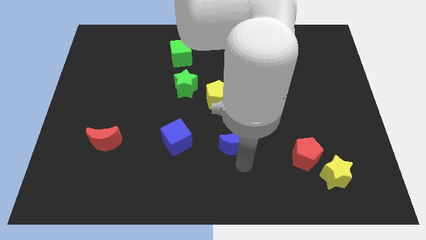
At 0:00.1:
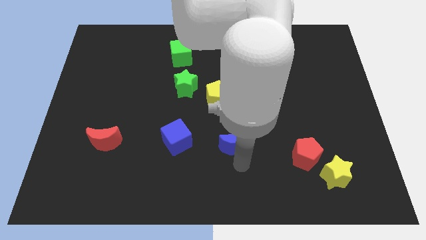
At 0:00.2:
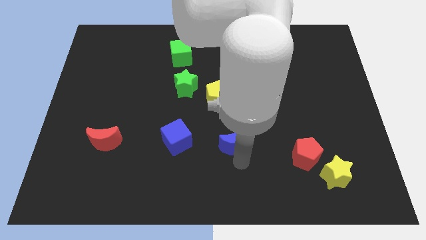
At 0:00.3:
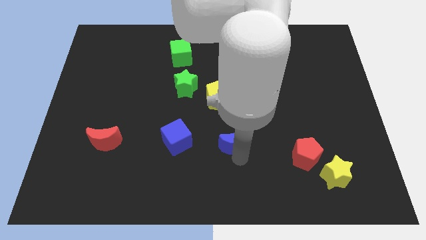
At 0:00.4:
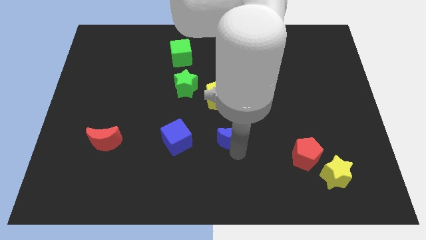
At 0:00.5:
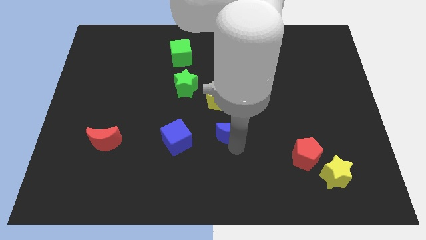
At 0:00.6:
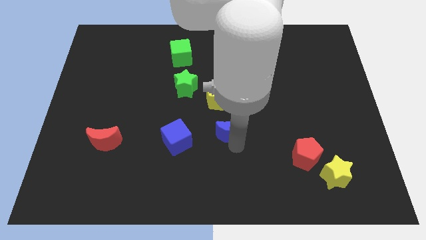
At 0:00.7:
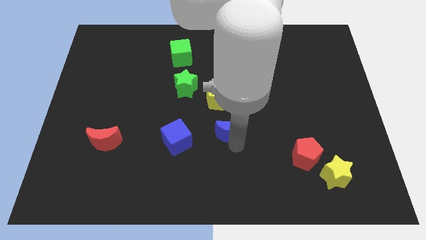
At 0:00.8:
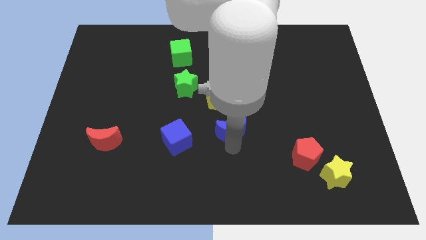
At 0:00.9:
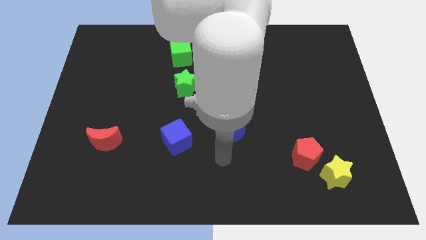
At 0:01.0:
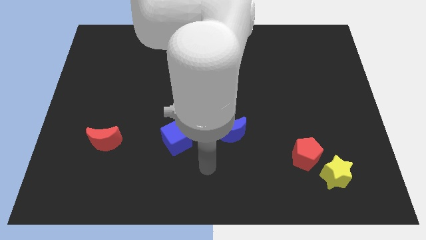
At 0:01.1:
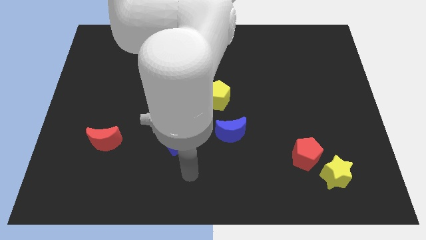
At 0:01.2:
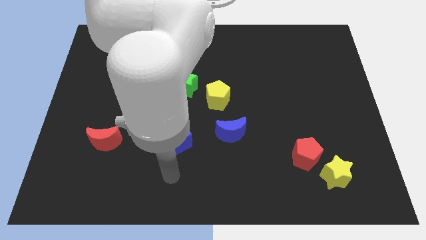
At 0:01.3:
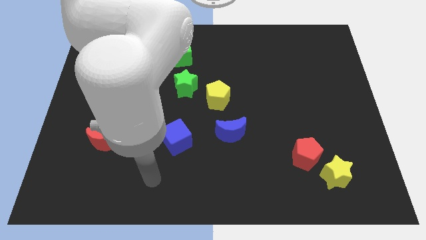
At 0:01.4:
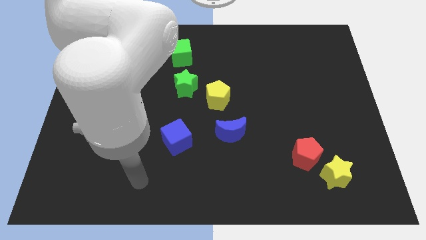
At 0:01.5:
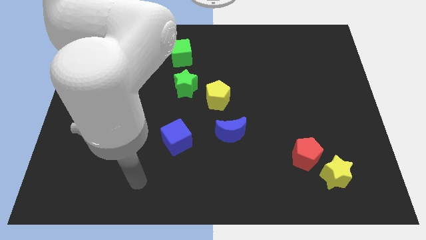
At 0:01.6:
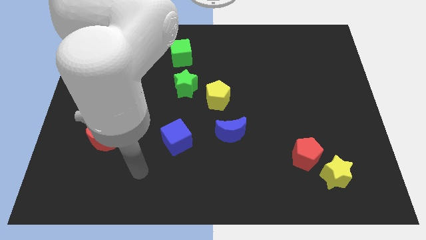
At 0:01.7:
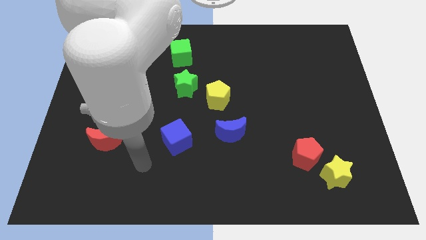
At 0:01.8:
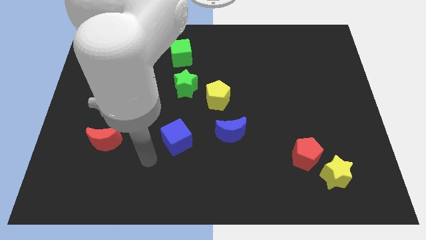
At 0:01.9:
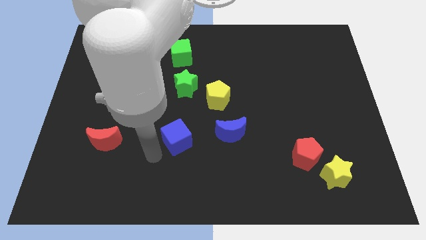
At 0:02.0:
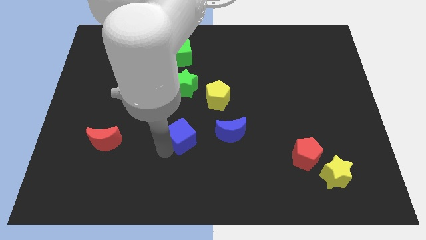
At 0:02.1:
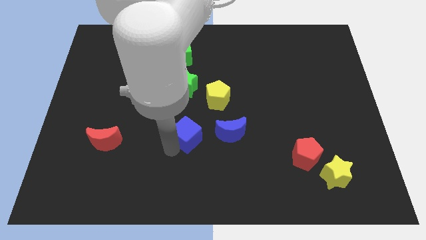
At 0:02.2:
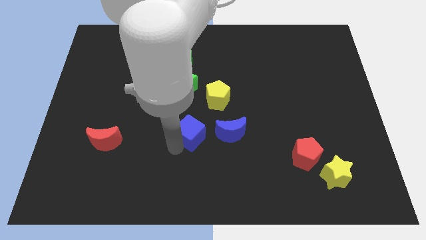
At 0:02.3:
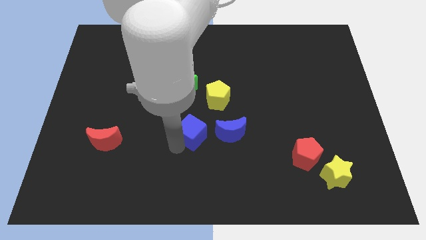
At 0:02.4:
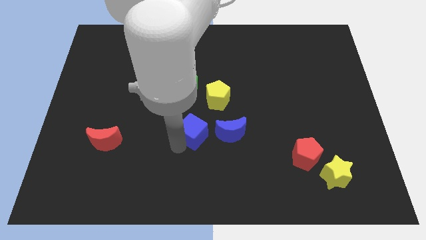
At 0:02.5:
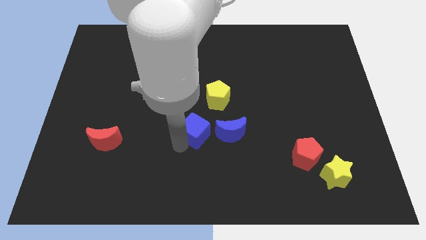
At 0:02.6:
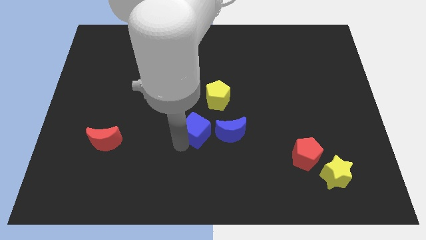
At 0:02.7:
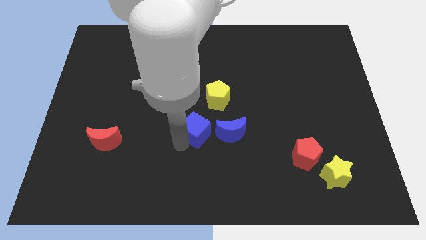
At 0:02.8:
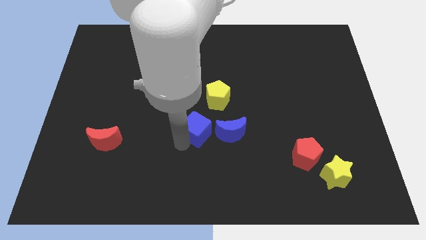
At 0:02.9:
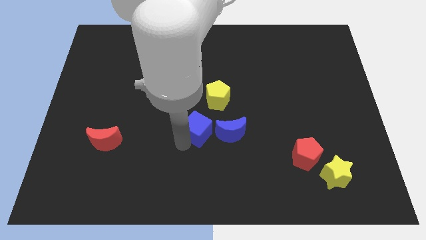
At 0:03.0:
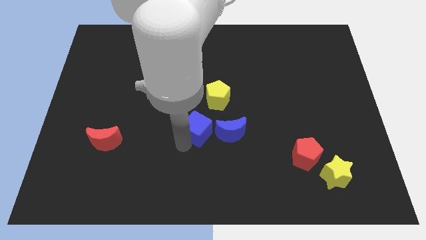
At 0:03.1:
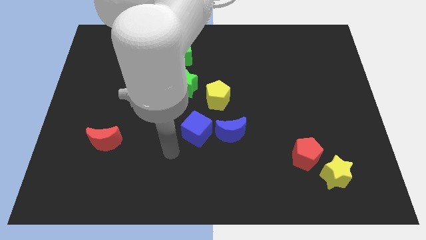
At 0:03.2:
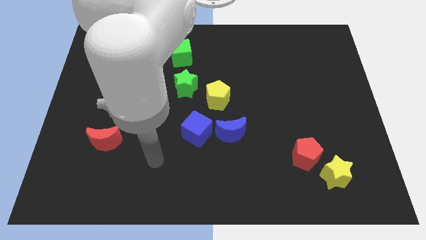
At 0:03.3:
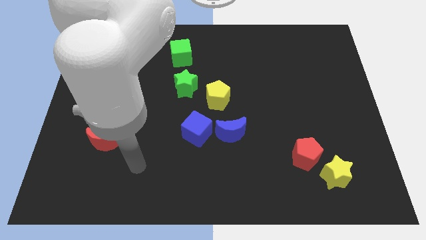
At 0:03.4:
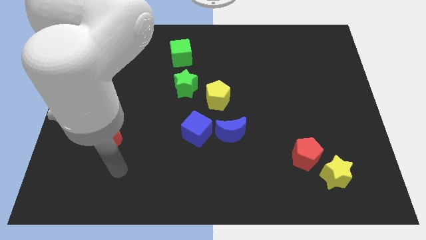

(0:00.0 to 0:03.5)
put the blue blocks together underneath the yellow pentagon

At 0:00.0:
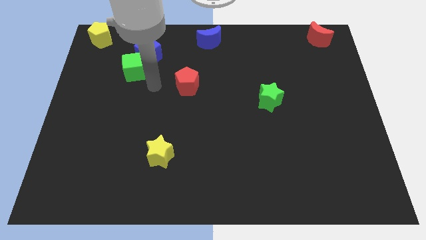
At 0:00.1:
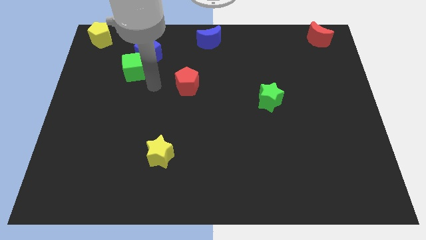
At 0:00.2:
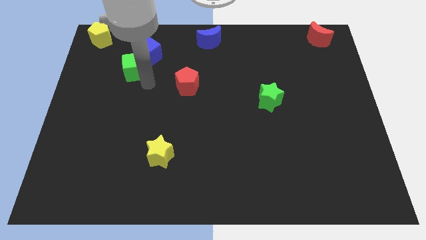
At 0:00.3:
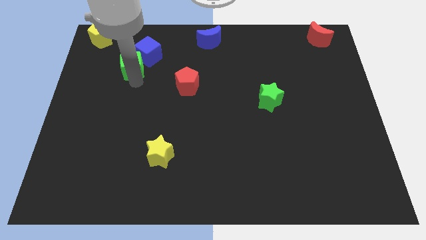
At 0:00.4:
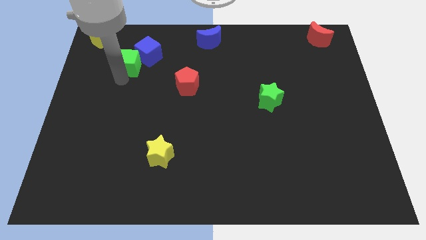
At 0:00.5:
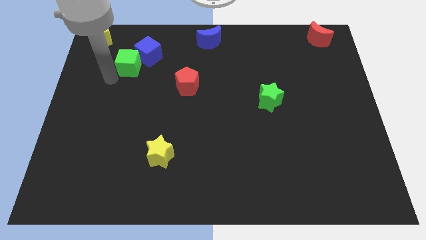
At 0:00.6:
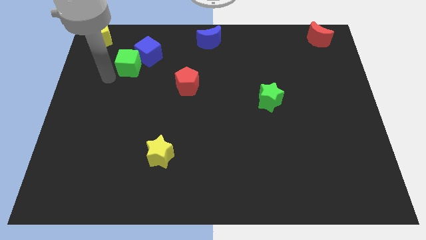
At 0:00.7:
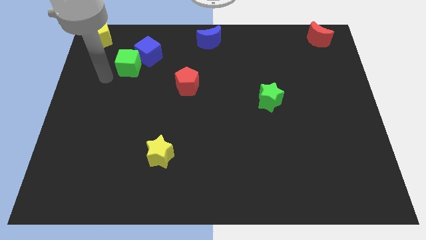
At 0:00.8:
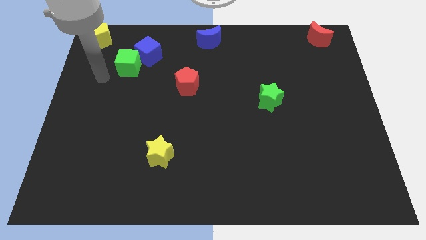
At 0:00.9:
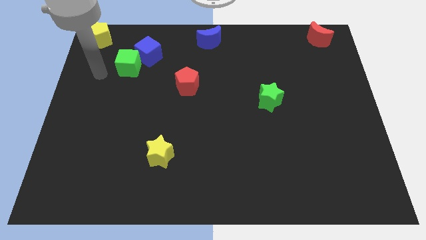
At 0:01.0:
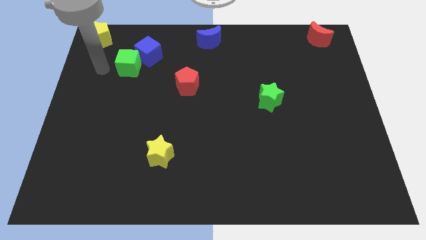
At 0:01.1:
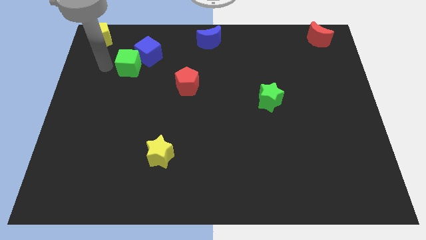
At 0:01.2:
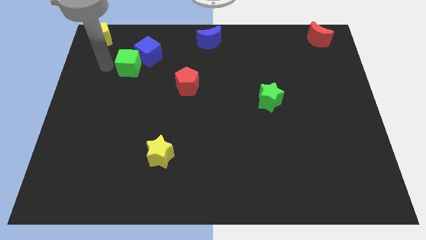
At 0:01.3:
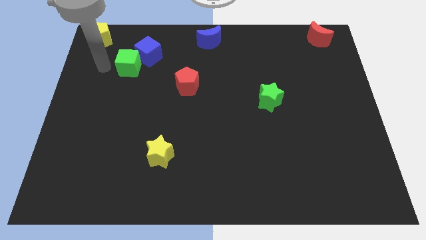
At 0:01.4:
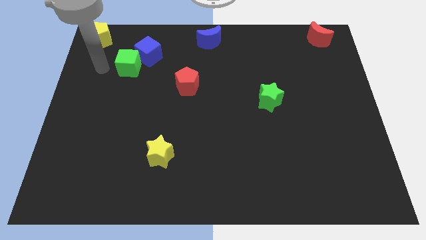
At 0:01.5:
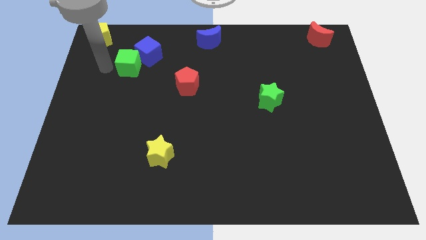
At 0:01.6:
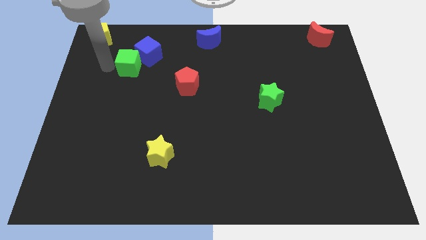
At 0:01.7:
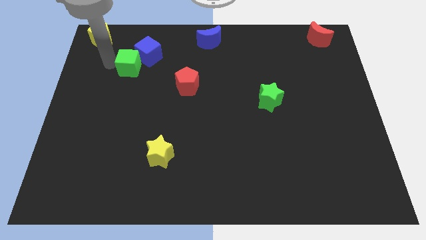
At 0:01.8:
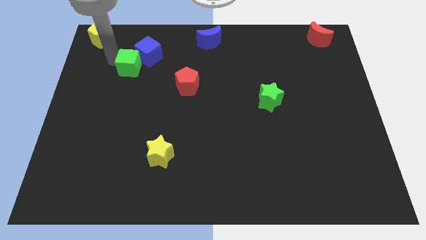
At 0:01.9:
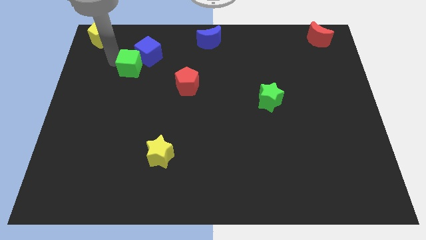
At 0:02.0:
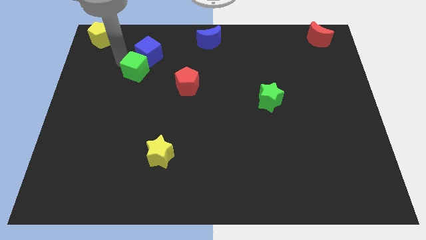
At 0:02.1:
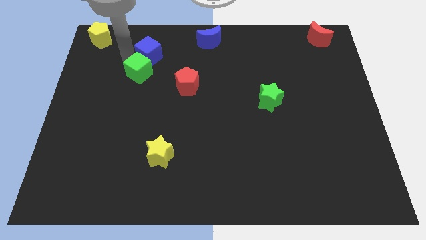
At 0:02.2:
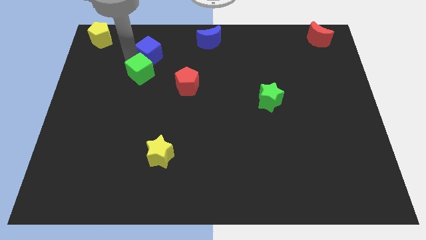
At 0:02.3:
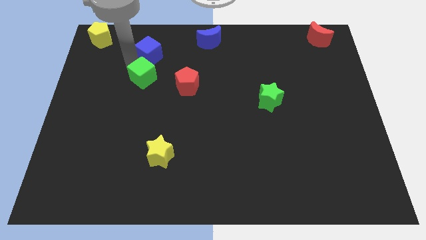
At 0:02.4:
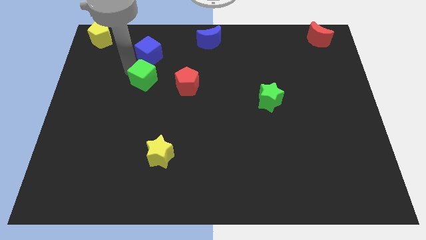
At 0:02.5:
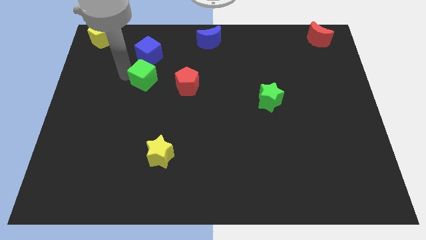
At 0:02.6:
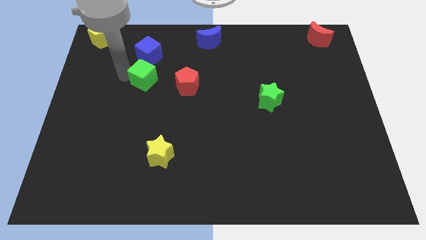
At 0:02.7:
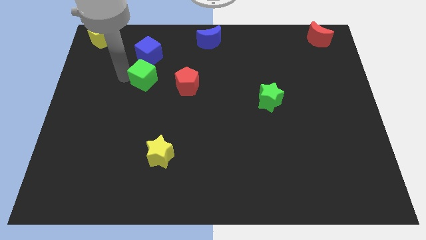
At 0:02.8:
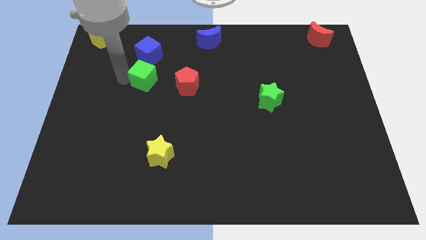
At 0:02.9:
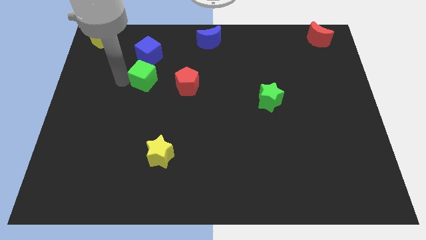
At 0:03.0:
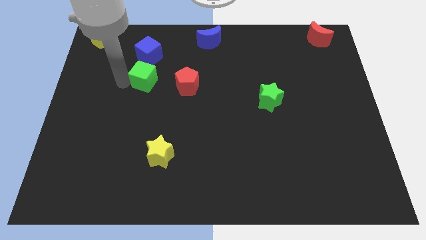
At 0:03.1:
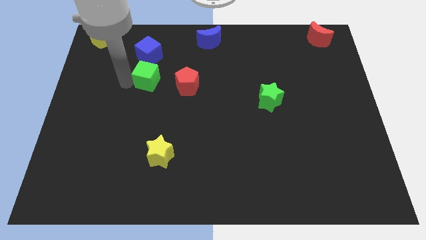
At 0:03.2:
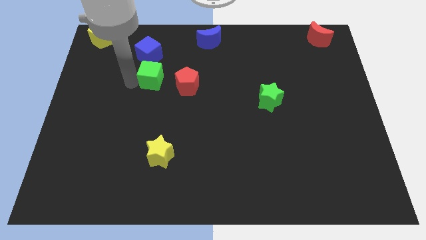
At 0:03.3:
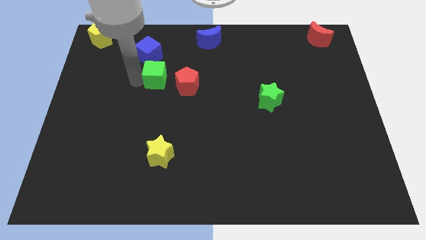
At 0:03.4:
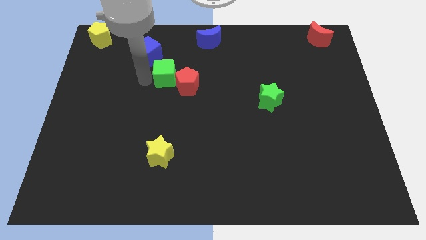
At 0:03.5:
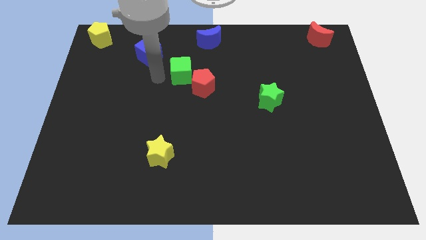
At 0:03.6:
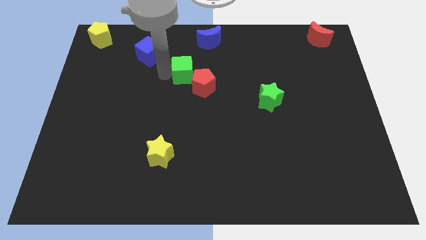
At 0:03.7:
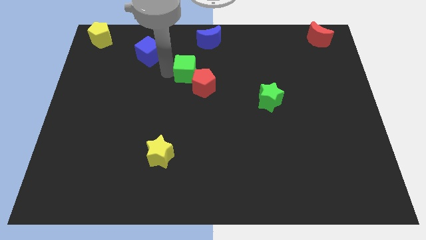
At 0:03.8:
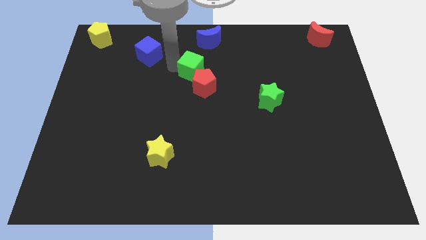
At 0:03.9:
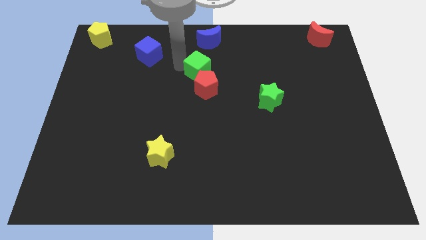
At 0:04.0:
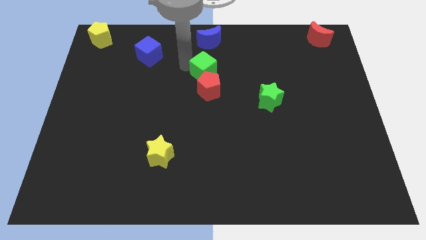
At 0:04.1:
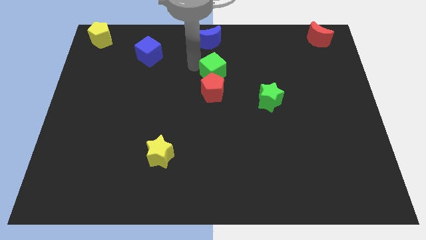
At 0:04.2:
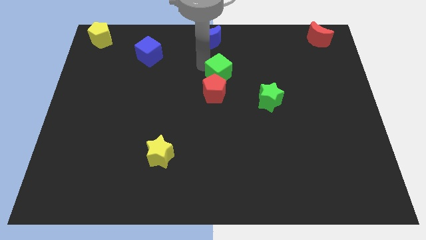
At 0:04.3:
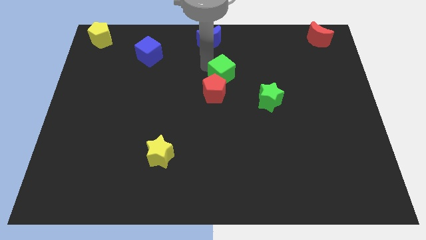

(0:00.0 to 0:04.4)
place the green cube above the red pentagon

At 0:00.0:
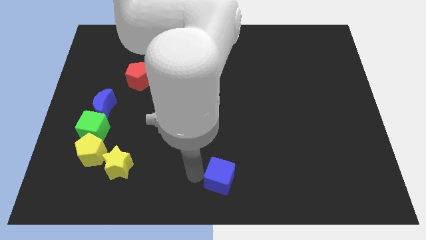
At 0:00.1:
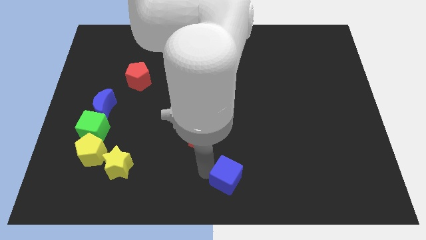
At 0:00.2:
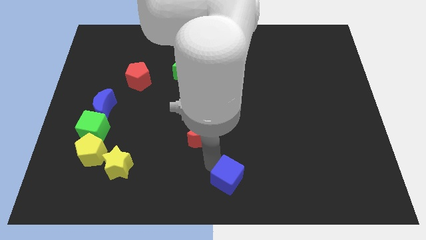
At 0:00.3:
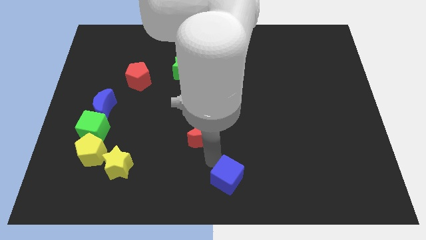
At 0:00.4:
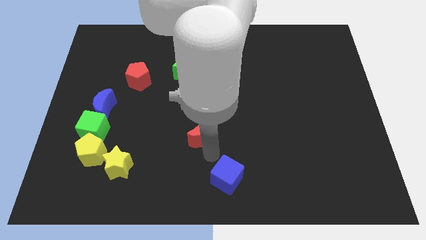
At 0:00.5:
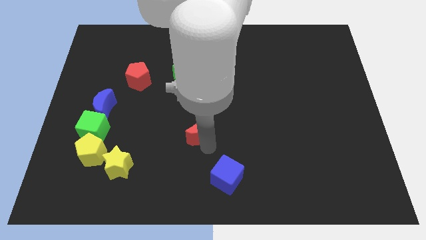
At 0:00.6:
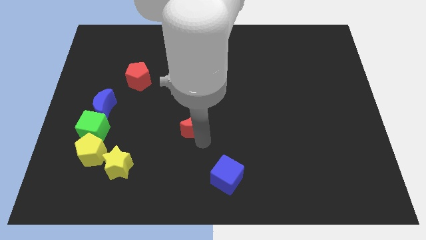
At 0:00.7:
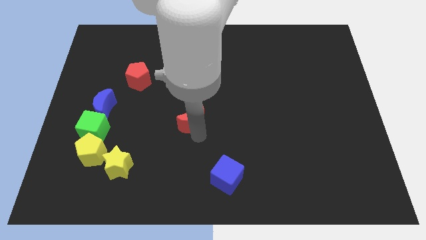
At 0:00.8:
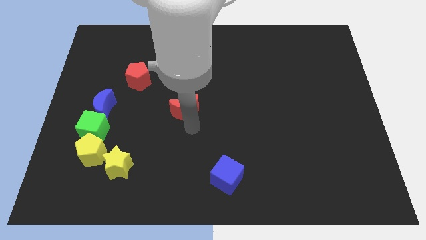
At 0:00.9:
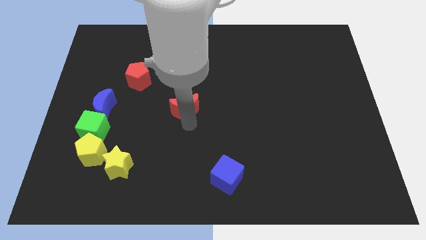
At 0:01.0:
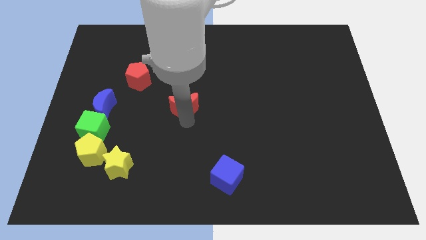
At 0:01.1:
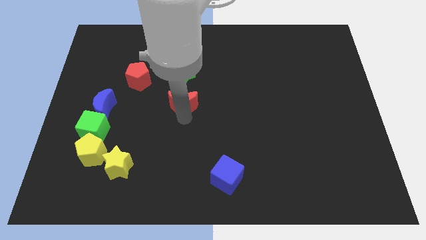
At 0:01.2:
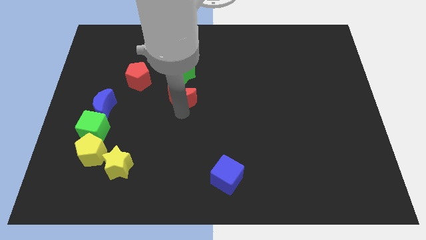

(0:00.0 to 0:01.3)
place the red moon diagonally bottom right to the red pentagon
